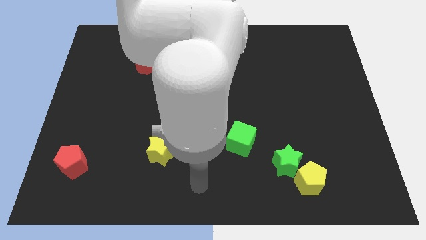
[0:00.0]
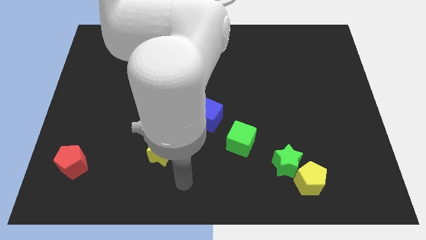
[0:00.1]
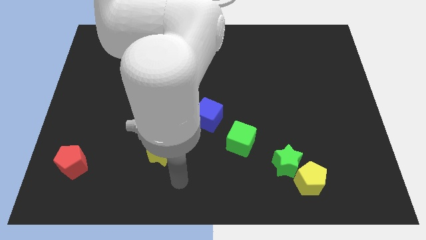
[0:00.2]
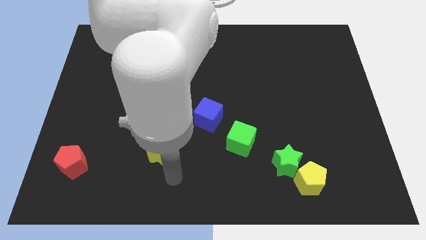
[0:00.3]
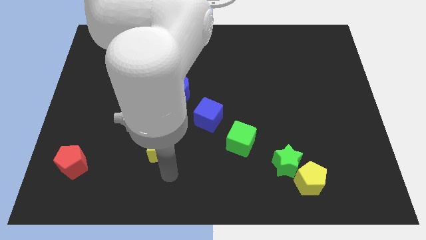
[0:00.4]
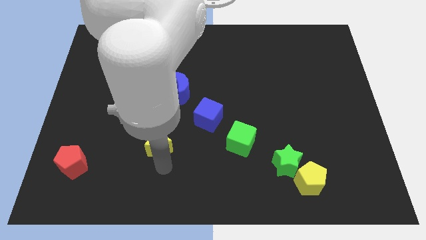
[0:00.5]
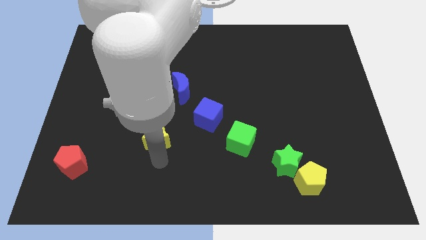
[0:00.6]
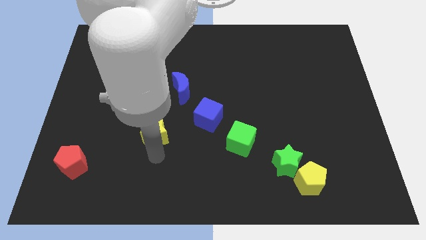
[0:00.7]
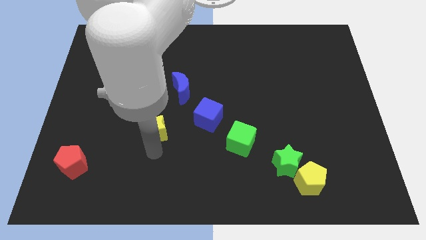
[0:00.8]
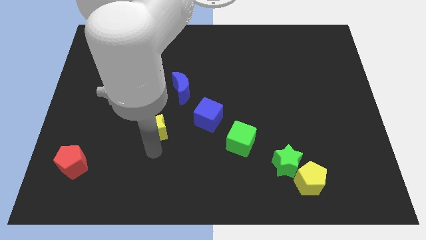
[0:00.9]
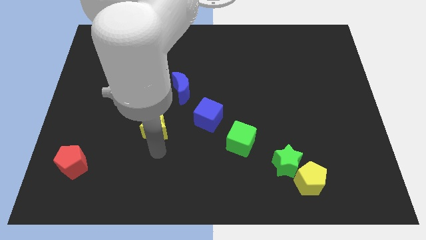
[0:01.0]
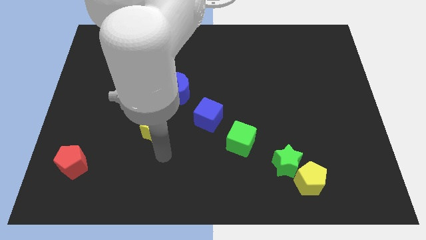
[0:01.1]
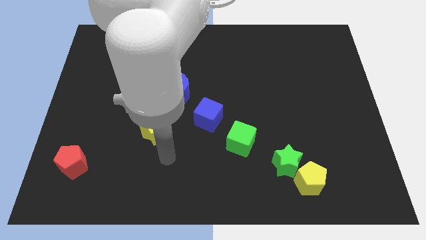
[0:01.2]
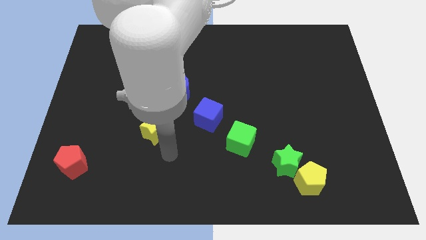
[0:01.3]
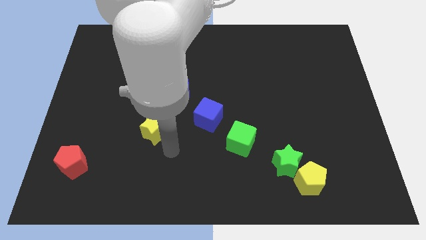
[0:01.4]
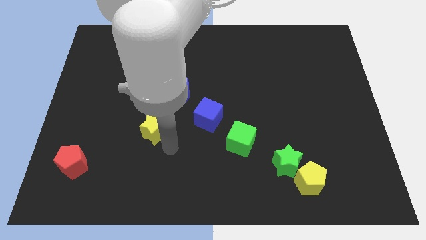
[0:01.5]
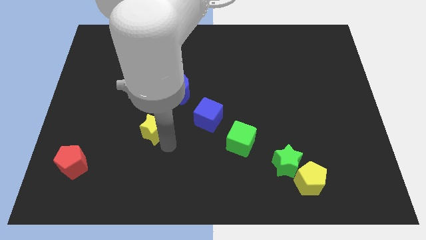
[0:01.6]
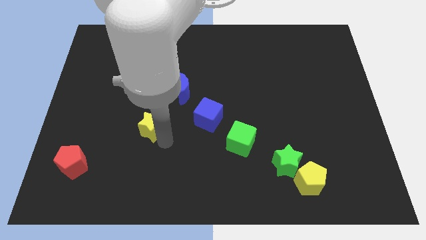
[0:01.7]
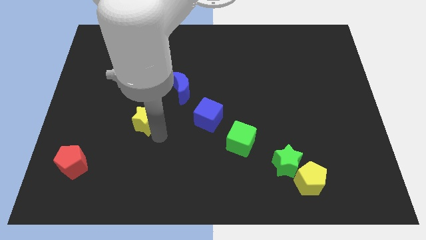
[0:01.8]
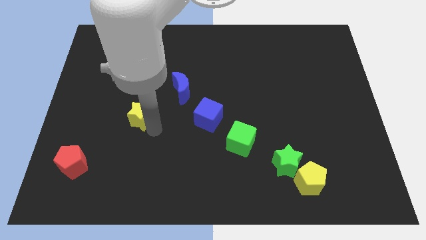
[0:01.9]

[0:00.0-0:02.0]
put the yellow star horizontally to the left side of the blue cube

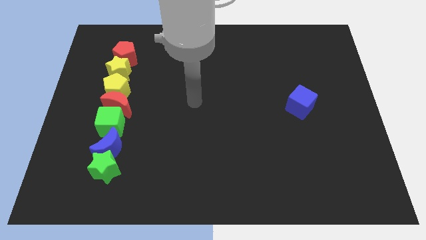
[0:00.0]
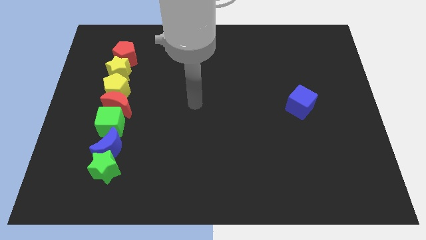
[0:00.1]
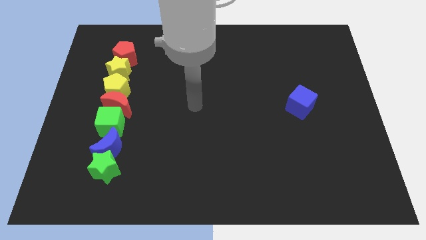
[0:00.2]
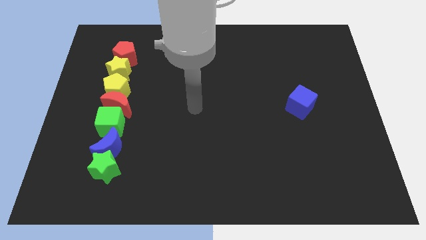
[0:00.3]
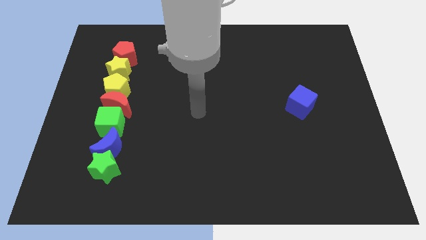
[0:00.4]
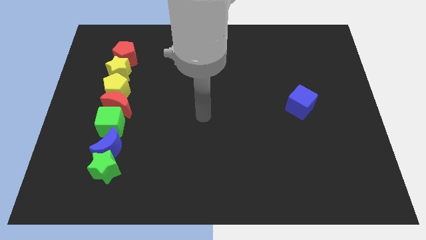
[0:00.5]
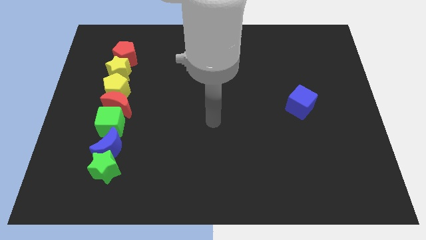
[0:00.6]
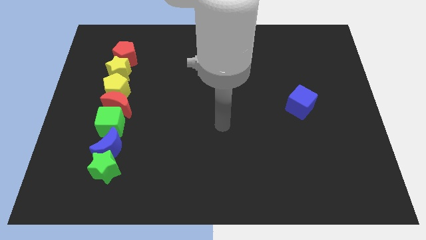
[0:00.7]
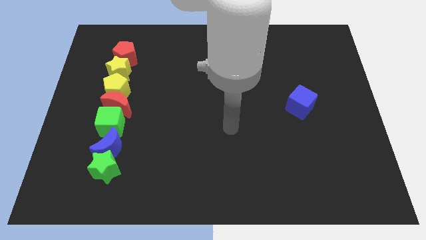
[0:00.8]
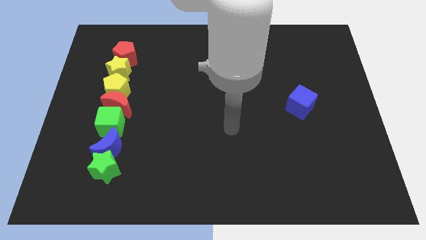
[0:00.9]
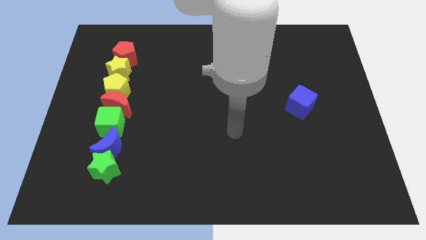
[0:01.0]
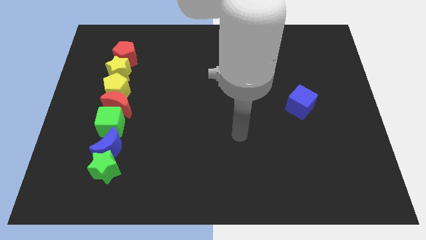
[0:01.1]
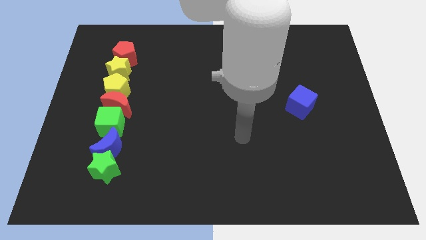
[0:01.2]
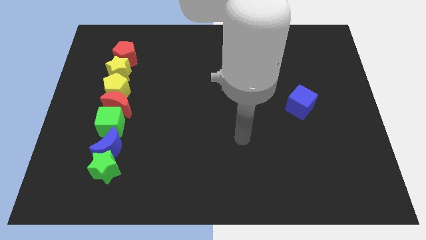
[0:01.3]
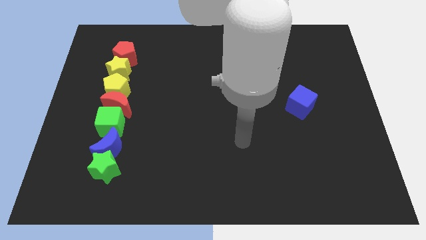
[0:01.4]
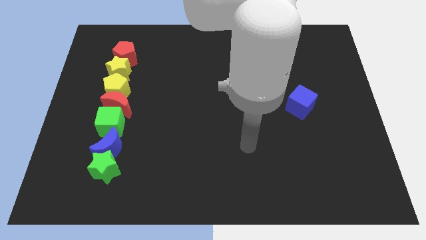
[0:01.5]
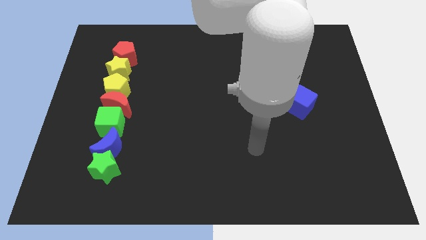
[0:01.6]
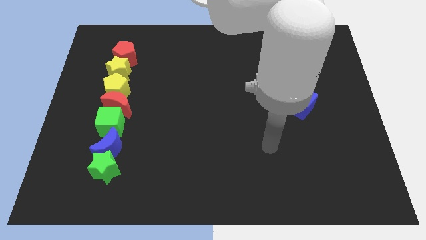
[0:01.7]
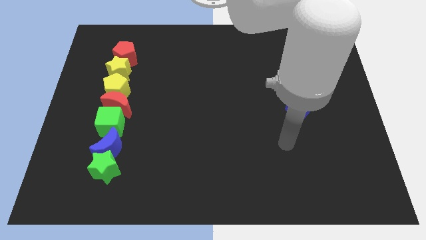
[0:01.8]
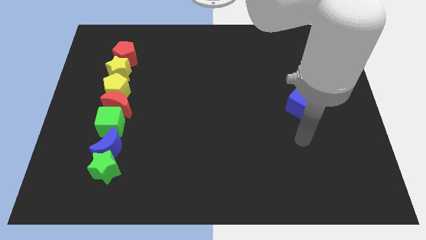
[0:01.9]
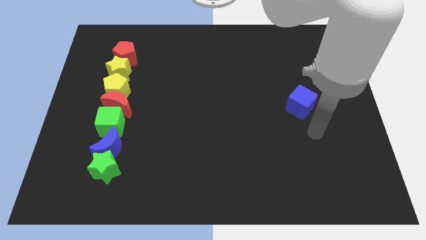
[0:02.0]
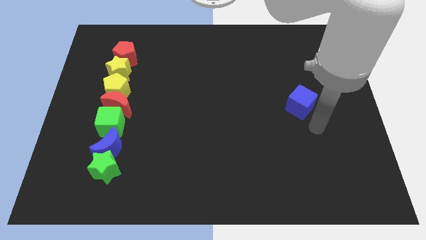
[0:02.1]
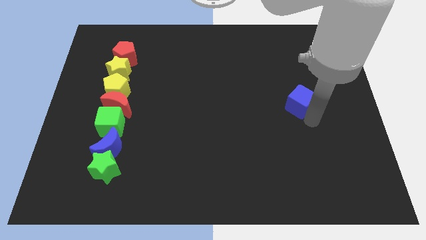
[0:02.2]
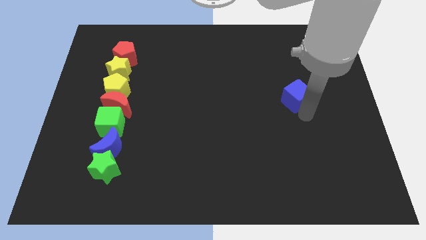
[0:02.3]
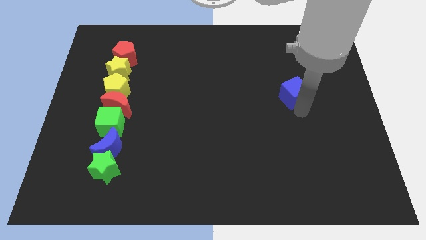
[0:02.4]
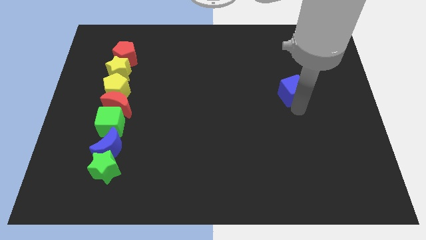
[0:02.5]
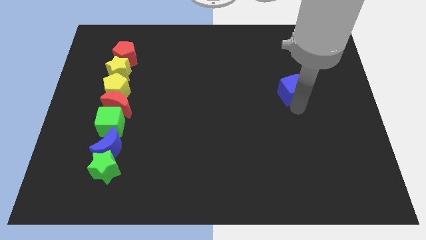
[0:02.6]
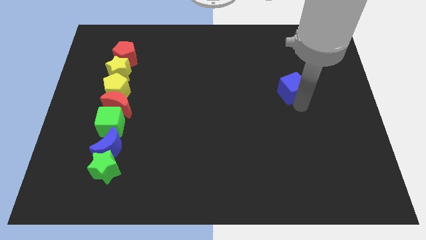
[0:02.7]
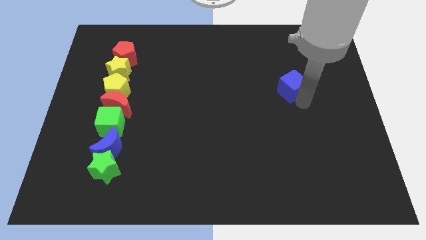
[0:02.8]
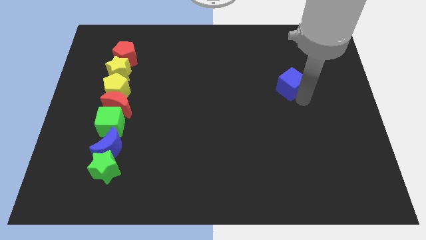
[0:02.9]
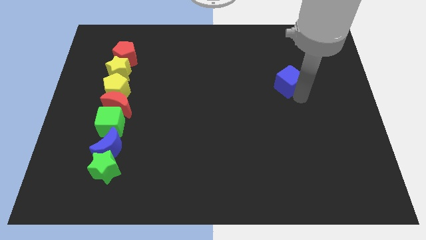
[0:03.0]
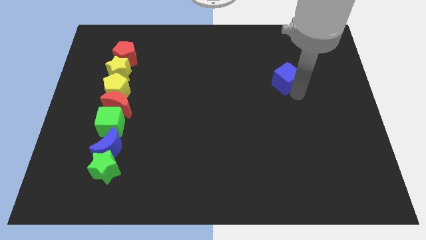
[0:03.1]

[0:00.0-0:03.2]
move blue cube upwards

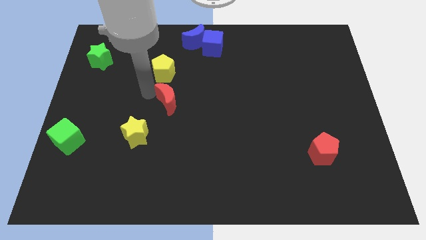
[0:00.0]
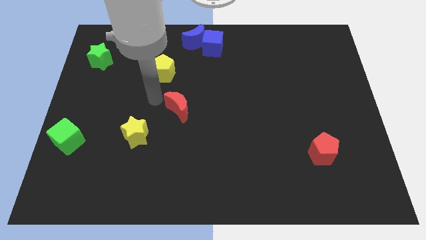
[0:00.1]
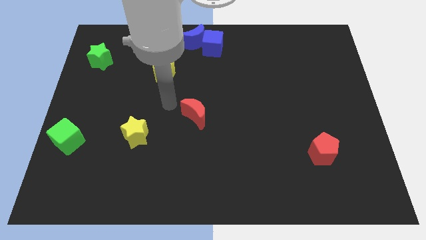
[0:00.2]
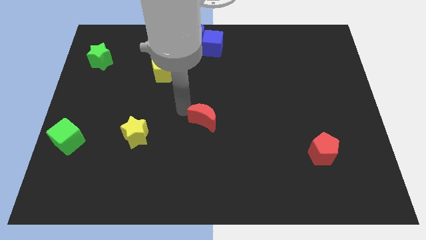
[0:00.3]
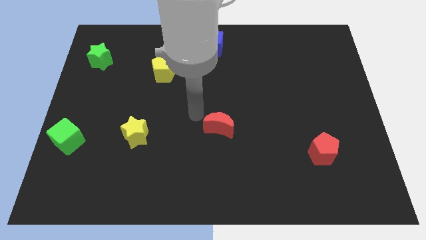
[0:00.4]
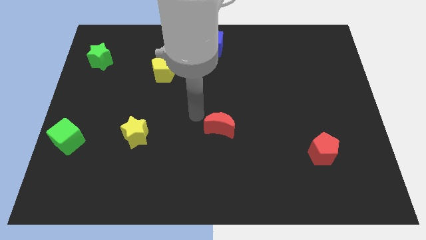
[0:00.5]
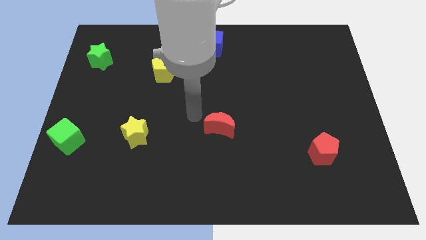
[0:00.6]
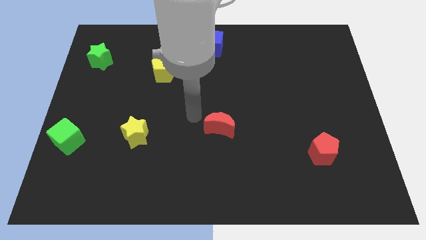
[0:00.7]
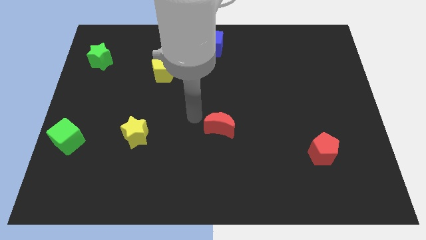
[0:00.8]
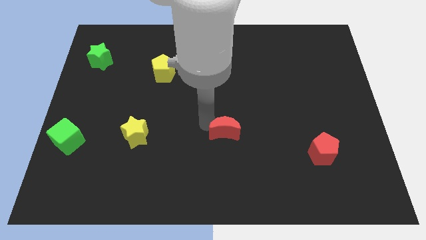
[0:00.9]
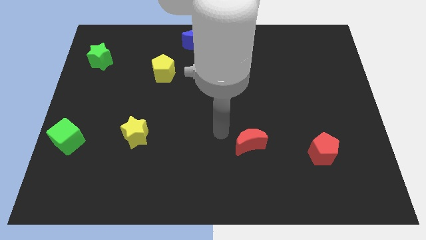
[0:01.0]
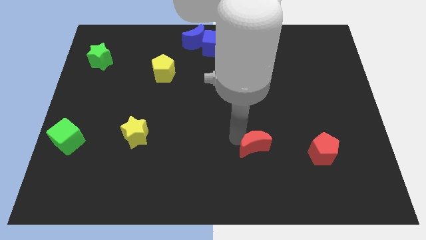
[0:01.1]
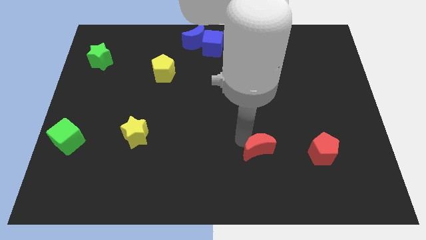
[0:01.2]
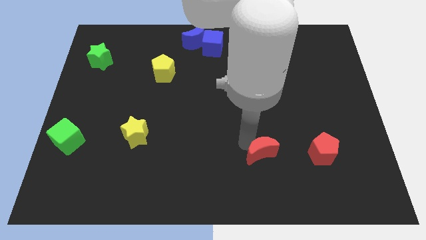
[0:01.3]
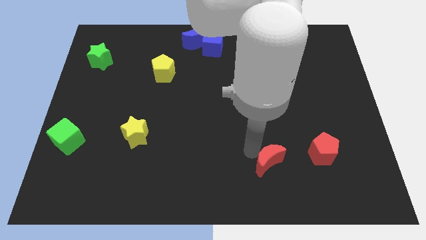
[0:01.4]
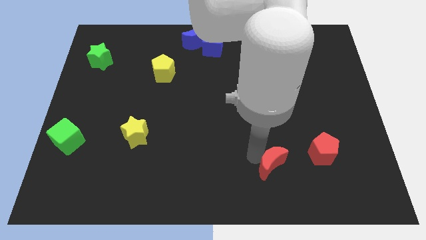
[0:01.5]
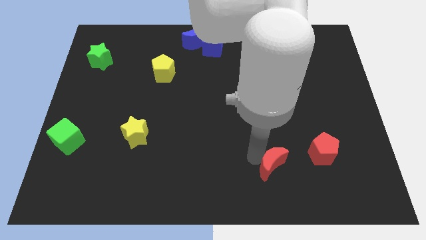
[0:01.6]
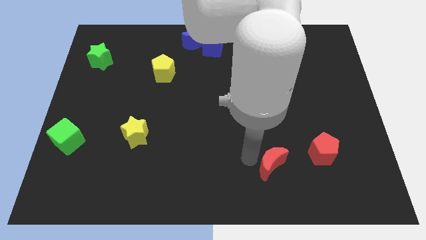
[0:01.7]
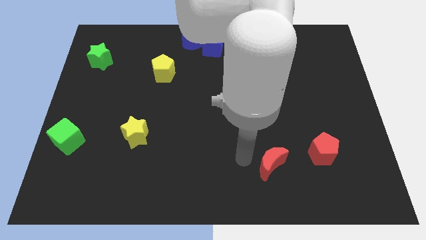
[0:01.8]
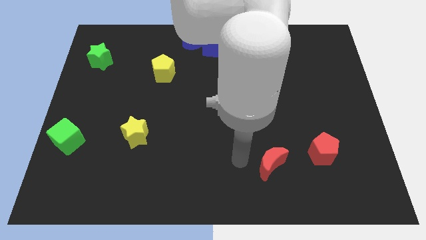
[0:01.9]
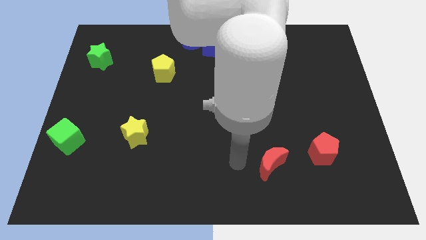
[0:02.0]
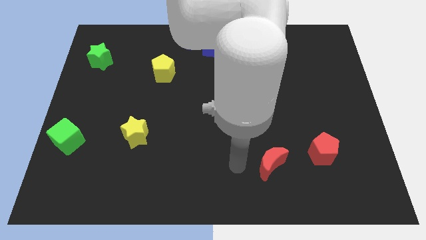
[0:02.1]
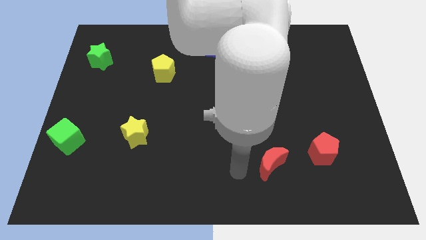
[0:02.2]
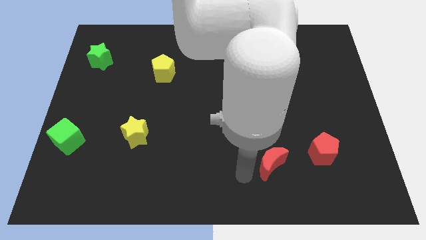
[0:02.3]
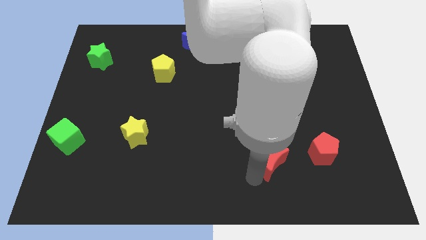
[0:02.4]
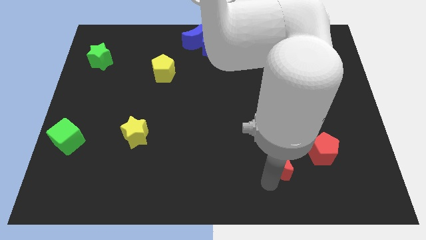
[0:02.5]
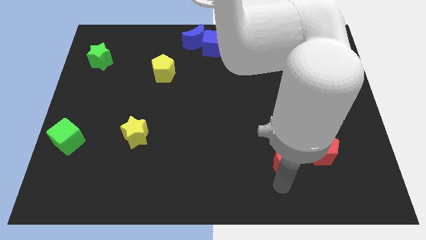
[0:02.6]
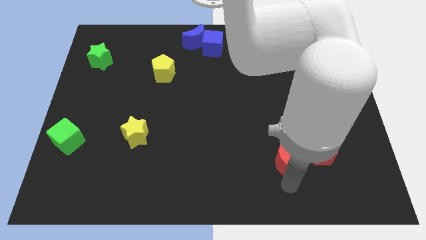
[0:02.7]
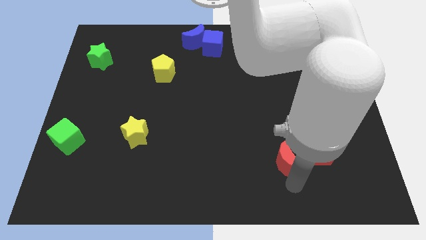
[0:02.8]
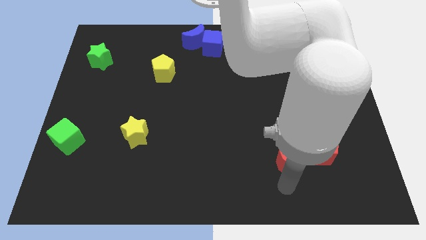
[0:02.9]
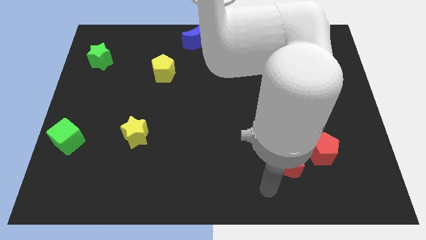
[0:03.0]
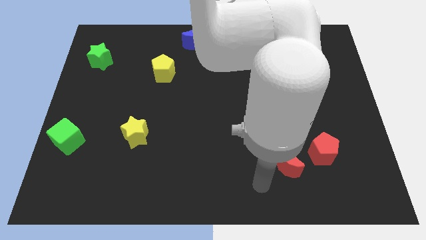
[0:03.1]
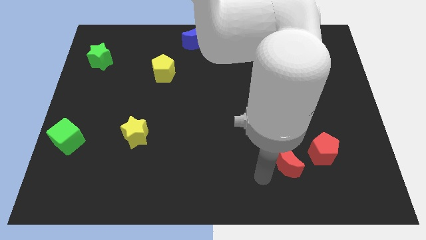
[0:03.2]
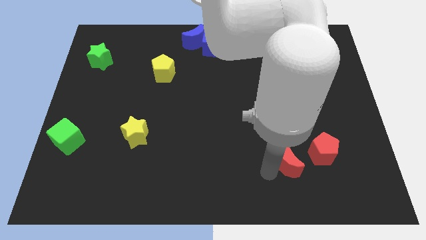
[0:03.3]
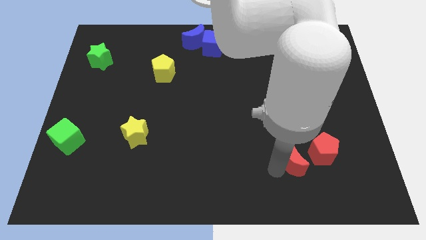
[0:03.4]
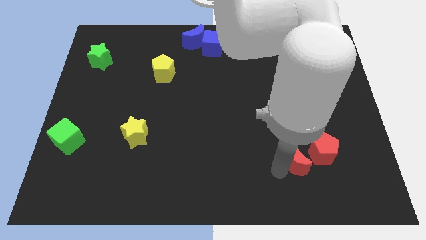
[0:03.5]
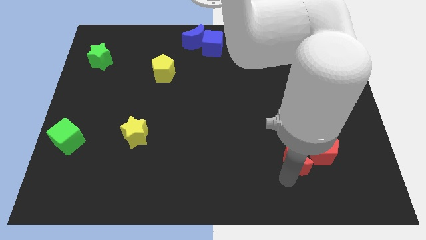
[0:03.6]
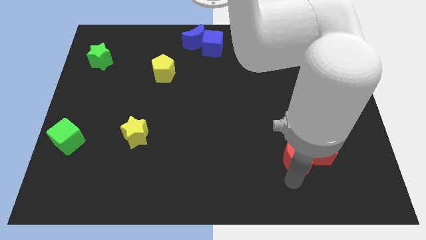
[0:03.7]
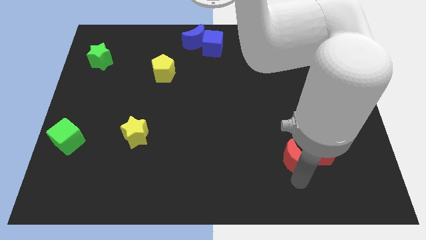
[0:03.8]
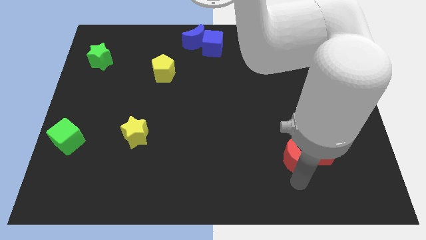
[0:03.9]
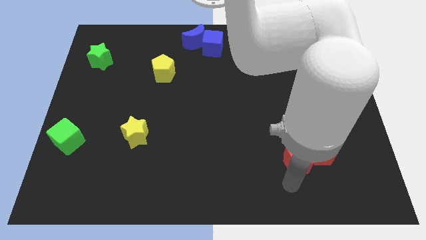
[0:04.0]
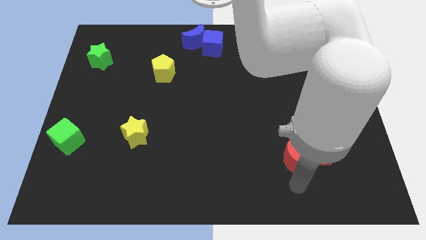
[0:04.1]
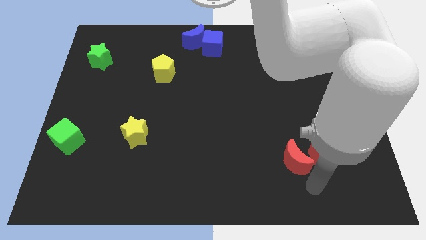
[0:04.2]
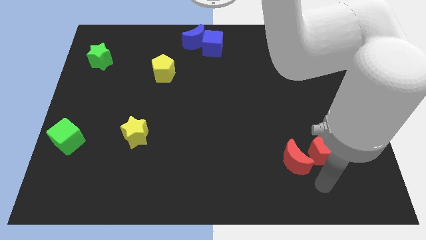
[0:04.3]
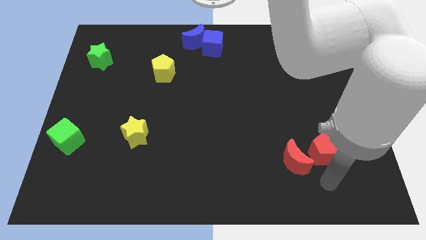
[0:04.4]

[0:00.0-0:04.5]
place red moon to the left of red pentagon
